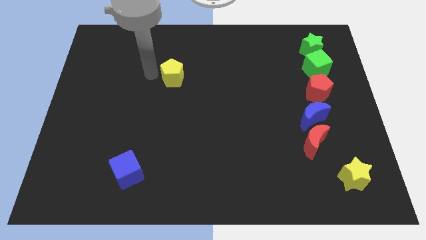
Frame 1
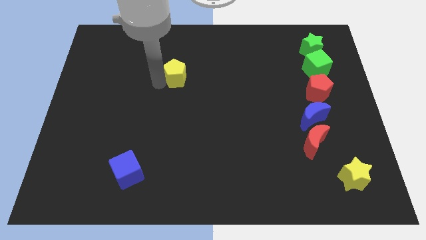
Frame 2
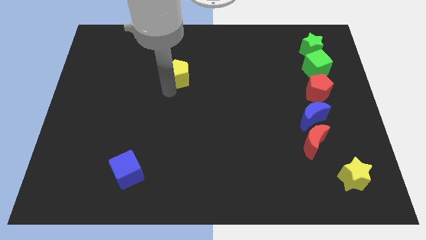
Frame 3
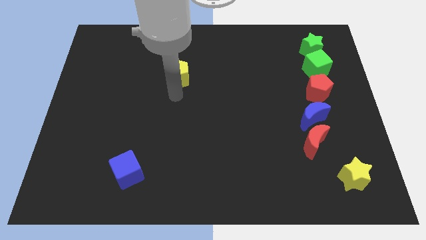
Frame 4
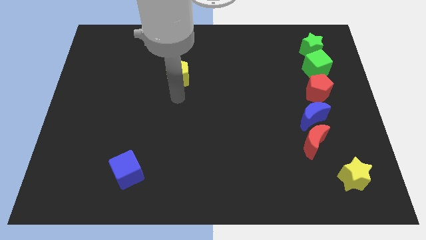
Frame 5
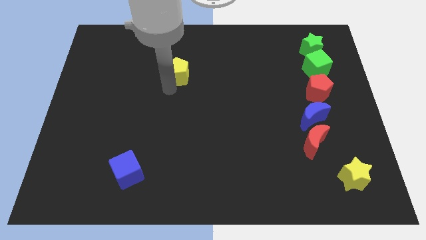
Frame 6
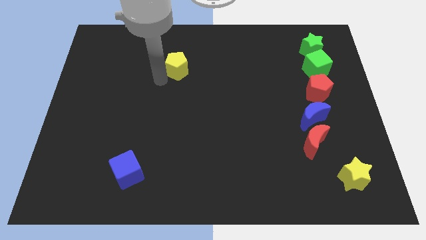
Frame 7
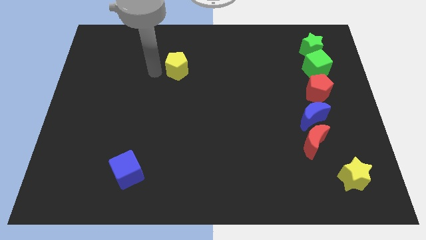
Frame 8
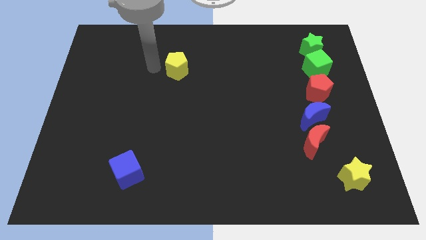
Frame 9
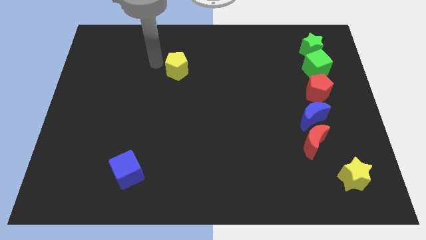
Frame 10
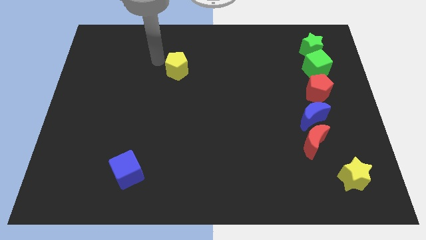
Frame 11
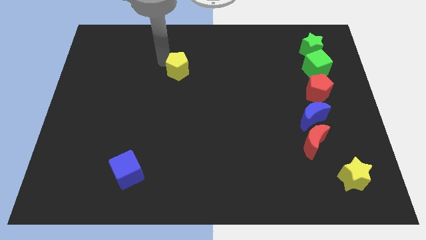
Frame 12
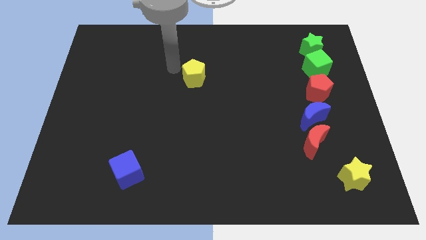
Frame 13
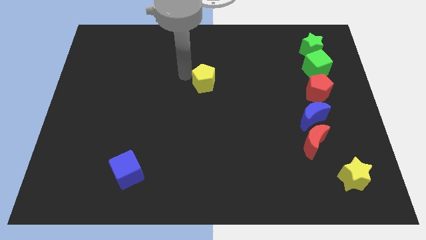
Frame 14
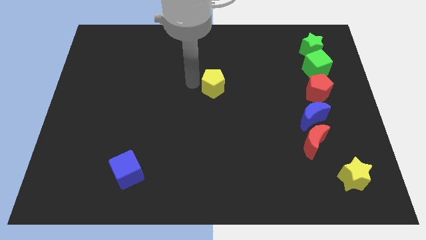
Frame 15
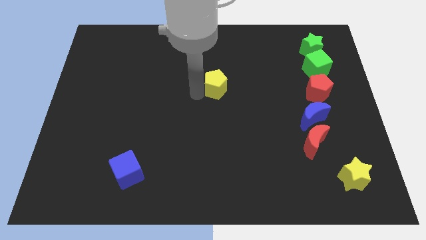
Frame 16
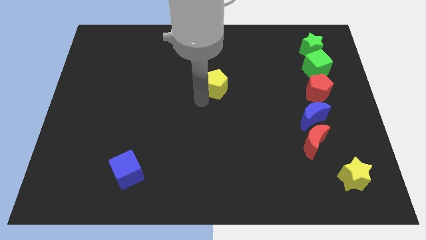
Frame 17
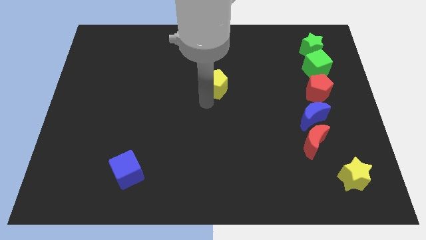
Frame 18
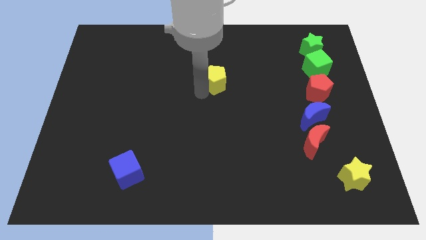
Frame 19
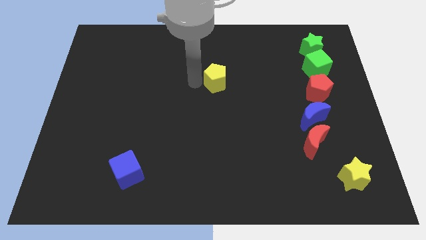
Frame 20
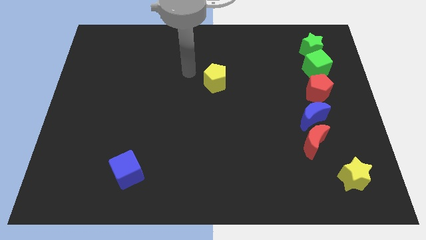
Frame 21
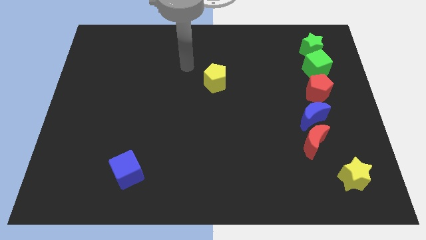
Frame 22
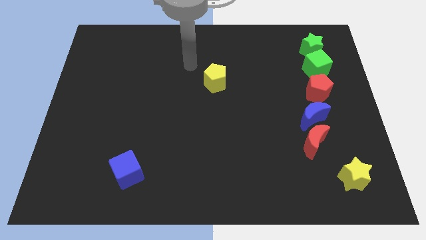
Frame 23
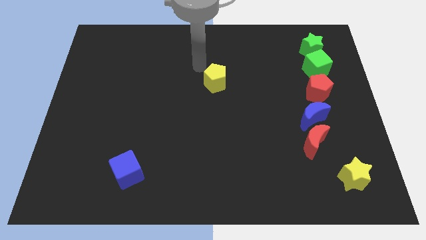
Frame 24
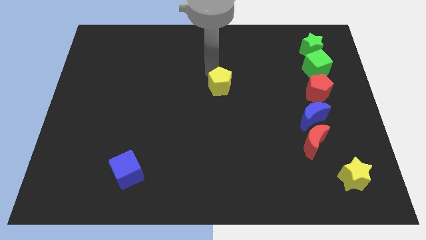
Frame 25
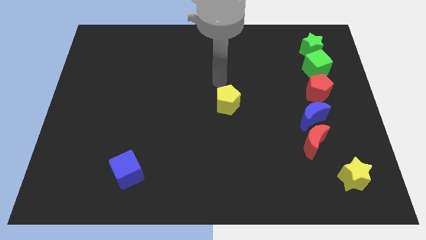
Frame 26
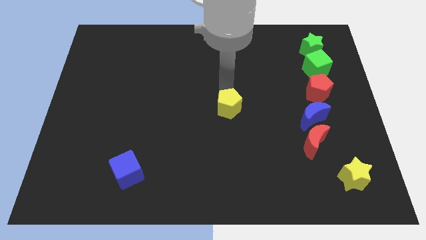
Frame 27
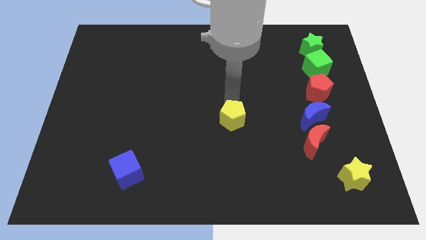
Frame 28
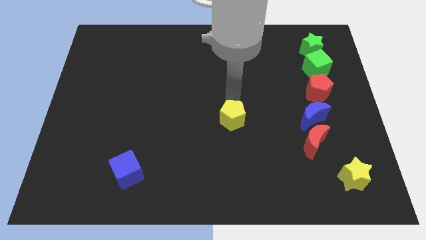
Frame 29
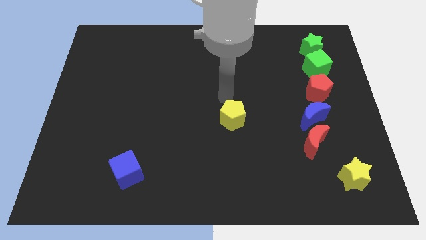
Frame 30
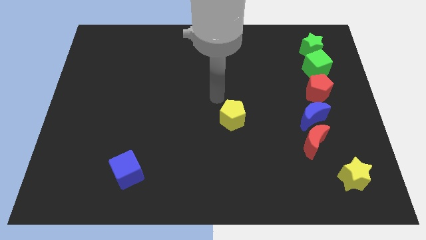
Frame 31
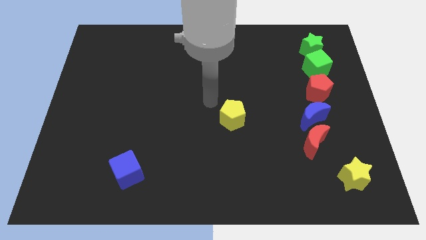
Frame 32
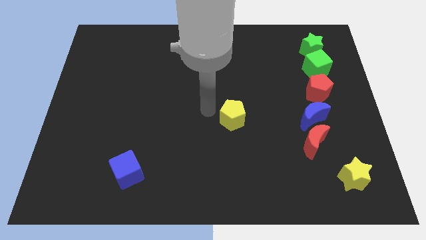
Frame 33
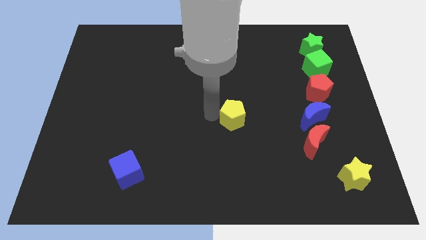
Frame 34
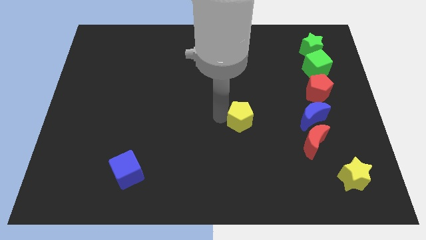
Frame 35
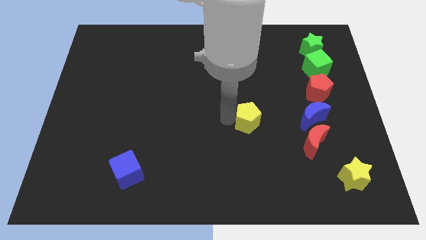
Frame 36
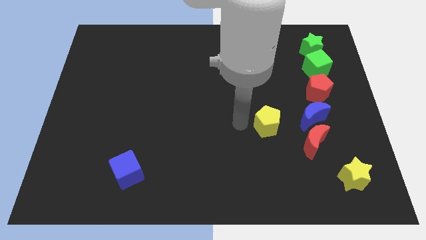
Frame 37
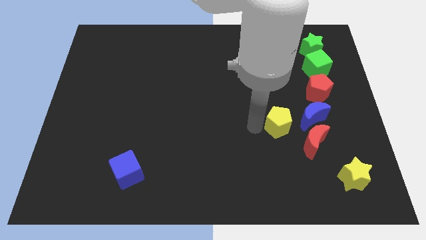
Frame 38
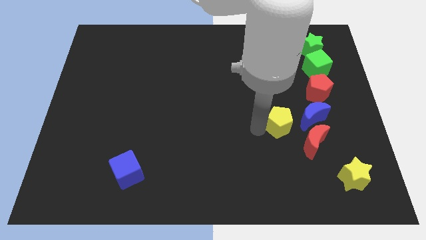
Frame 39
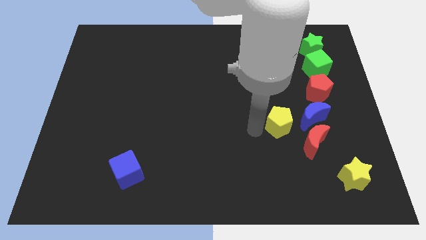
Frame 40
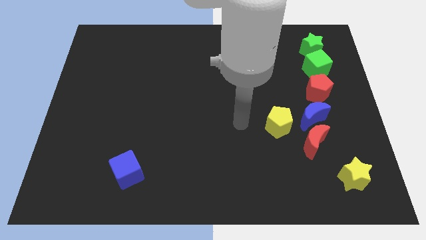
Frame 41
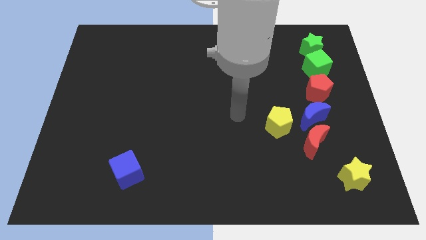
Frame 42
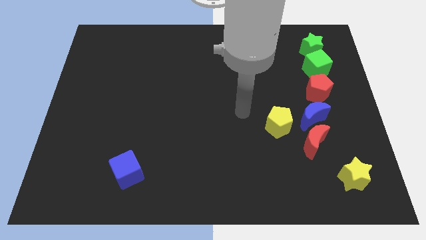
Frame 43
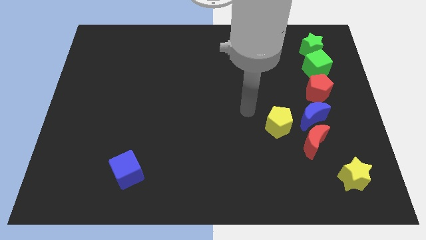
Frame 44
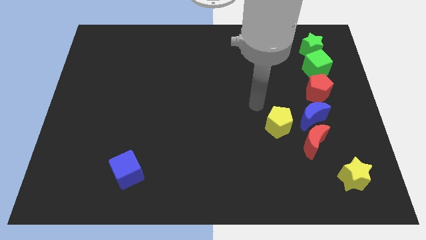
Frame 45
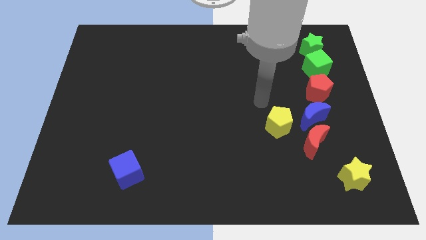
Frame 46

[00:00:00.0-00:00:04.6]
push yellow pentagon down wards

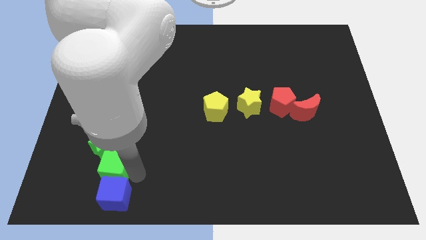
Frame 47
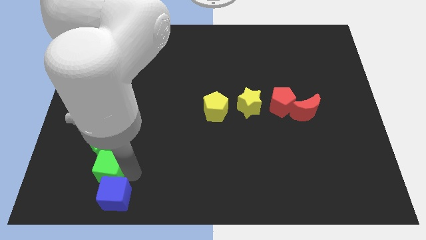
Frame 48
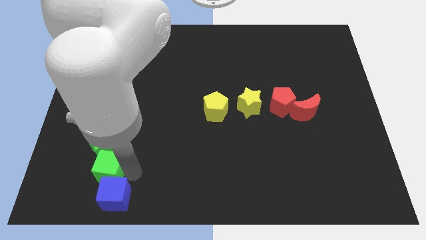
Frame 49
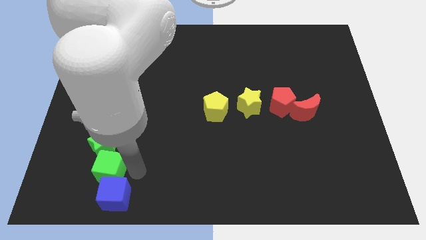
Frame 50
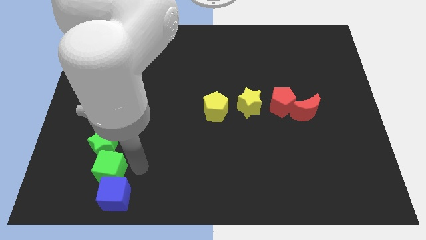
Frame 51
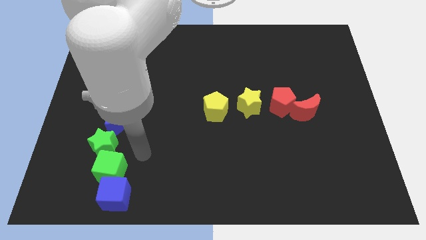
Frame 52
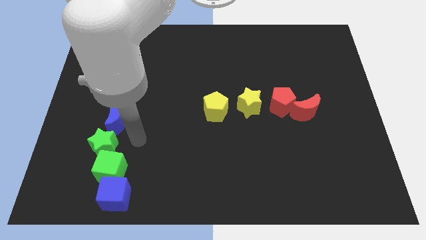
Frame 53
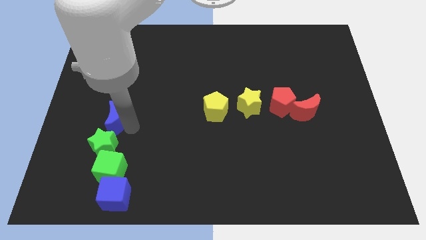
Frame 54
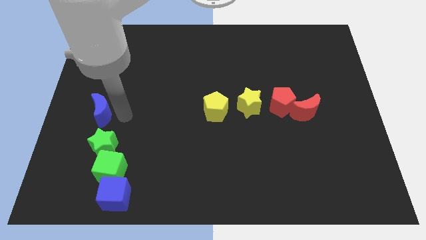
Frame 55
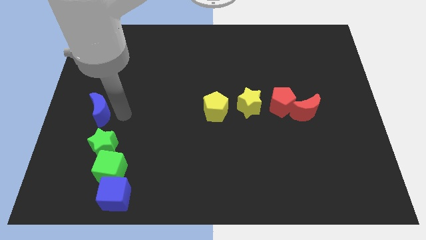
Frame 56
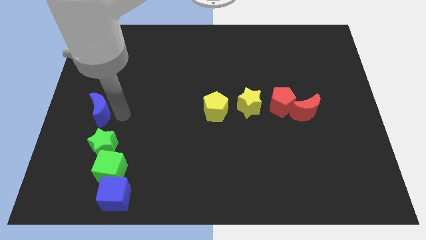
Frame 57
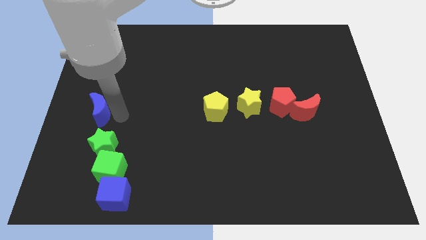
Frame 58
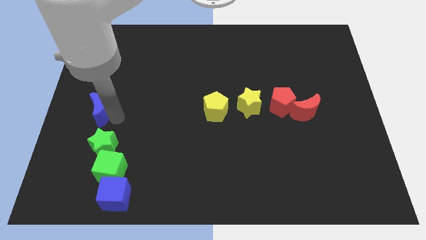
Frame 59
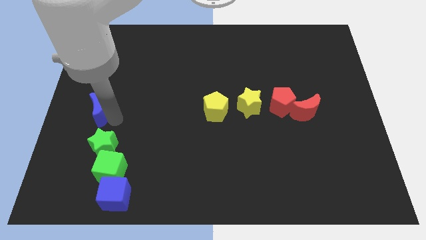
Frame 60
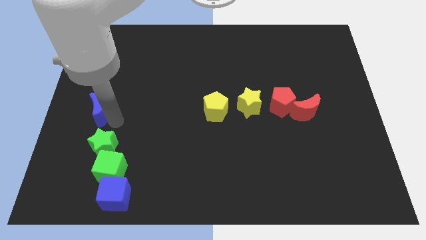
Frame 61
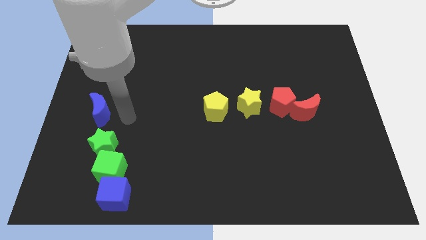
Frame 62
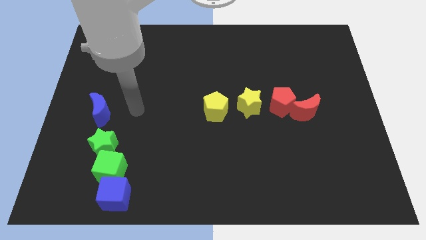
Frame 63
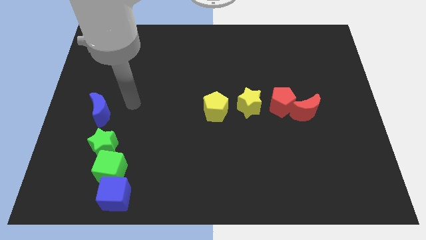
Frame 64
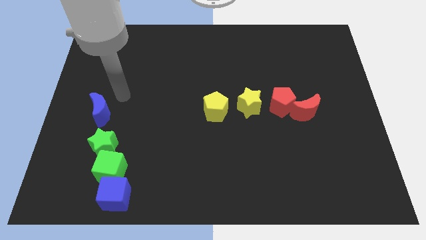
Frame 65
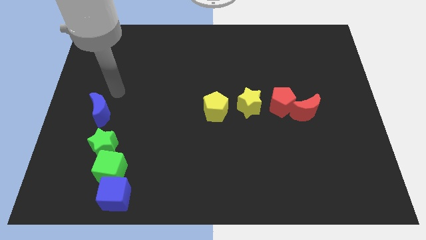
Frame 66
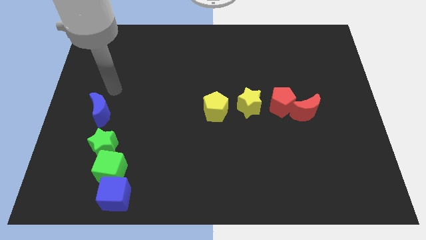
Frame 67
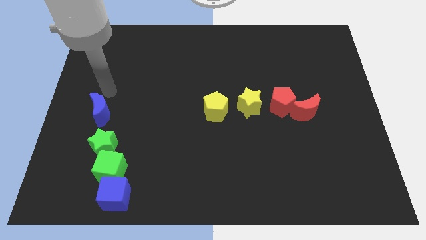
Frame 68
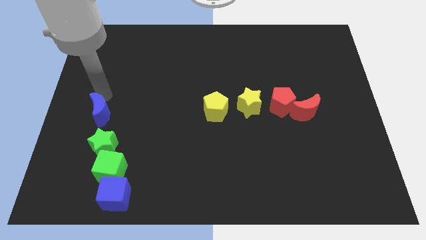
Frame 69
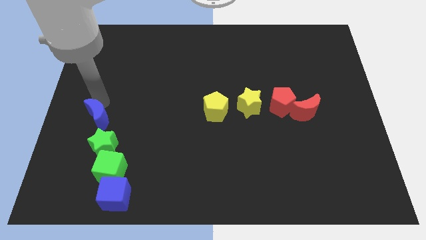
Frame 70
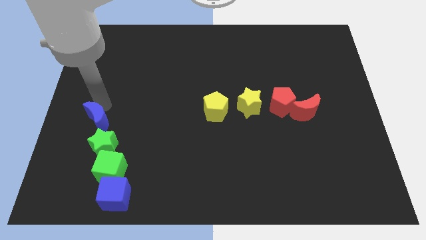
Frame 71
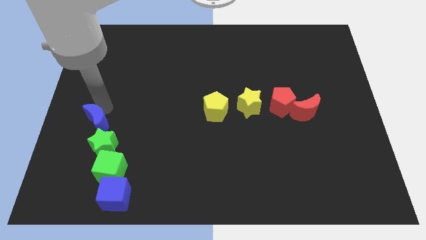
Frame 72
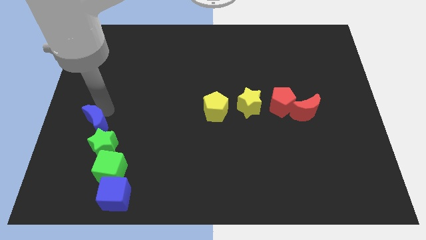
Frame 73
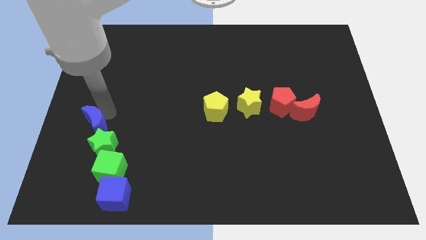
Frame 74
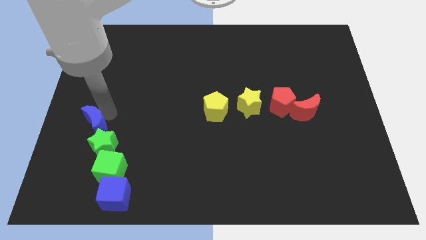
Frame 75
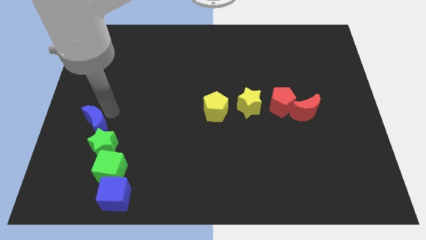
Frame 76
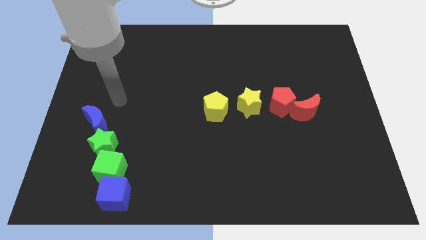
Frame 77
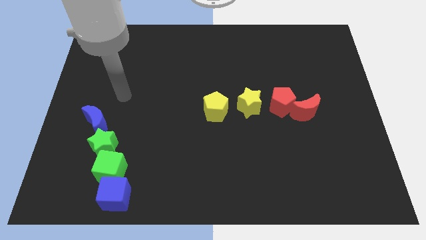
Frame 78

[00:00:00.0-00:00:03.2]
arrange the blue crescent and green cube in a vertical line

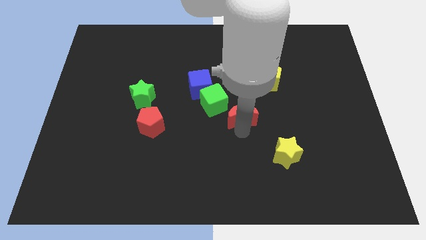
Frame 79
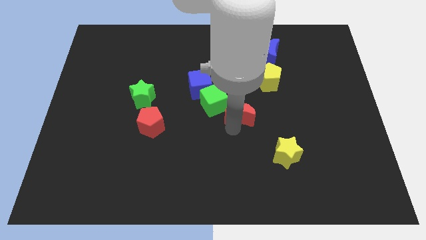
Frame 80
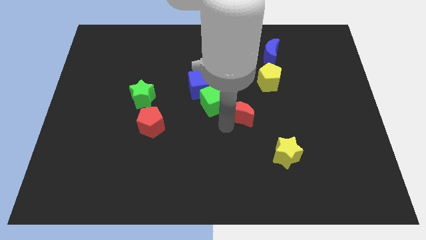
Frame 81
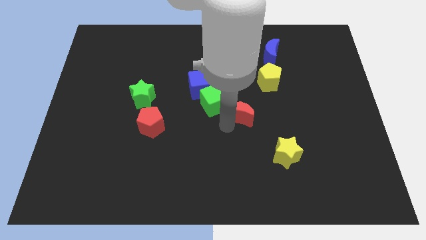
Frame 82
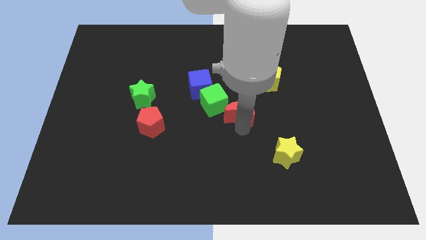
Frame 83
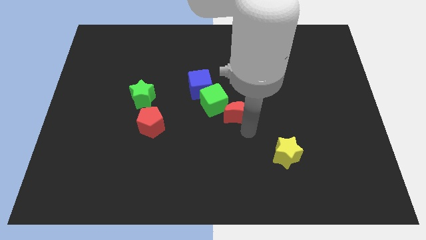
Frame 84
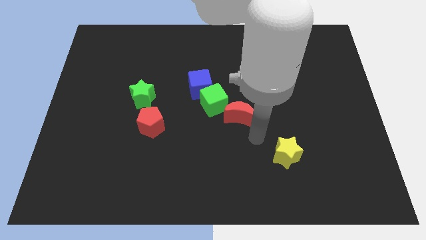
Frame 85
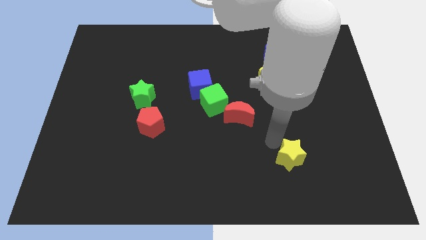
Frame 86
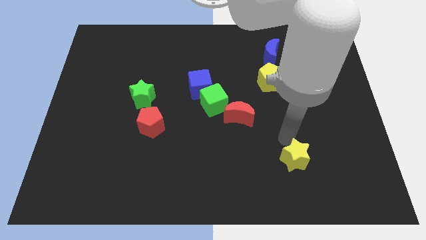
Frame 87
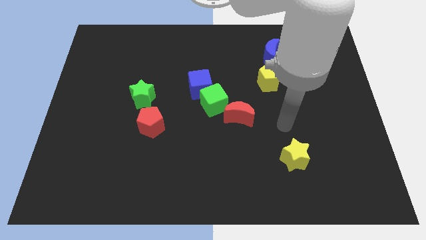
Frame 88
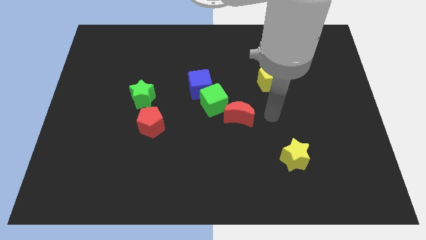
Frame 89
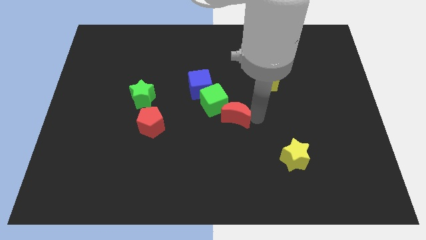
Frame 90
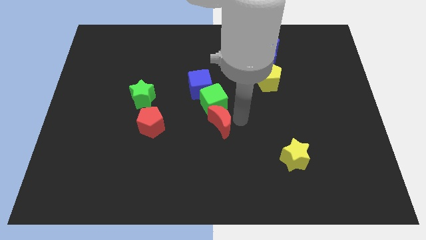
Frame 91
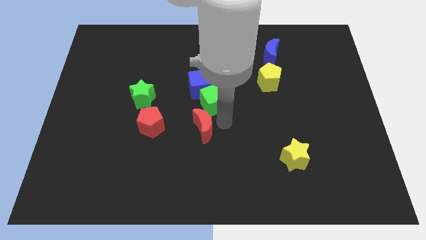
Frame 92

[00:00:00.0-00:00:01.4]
slide the red moon diagonally bottom left to the green cube
